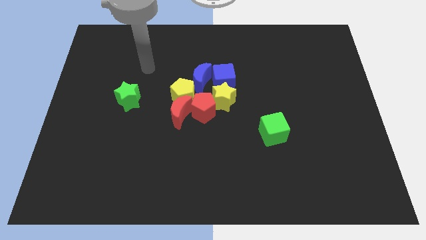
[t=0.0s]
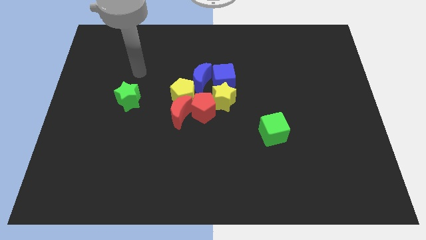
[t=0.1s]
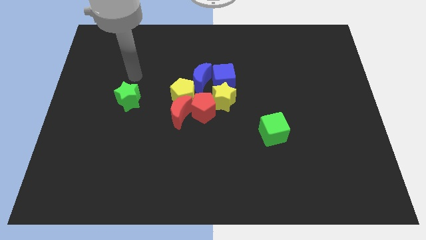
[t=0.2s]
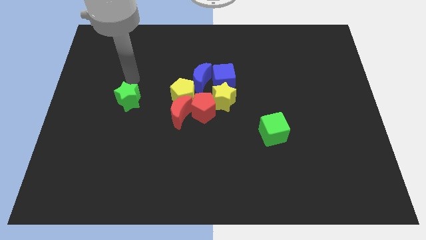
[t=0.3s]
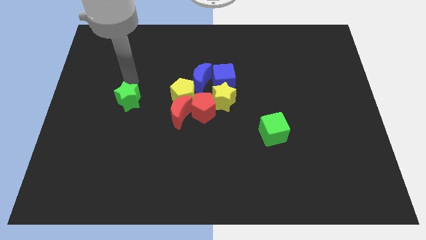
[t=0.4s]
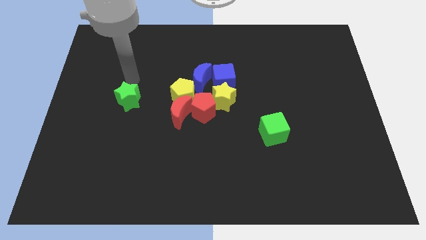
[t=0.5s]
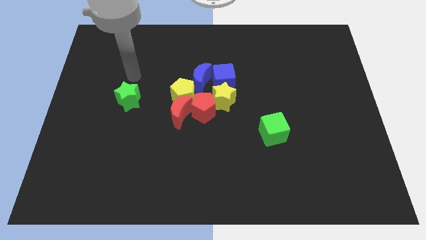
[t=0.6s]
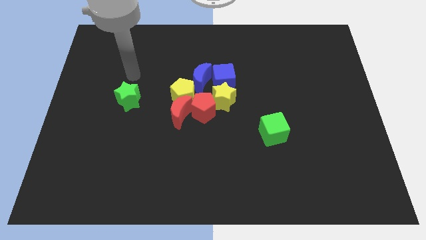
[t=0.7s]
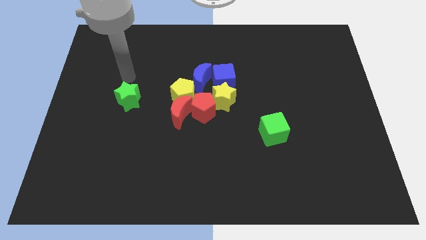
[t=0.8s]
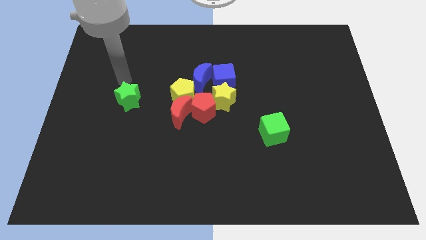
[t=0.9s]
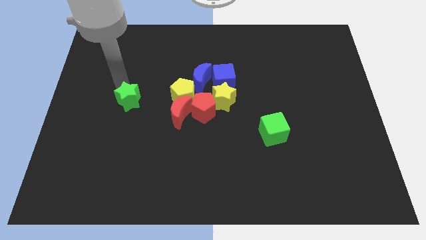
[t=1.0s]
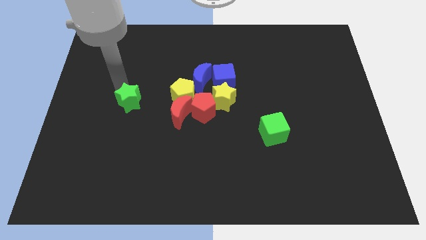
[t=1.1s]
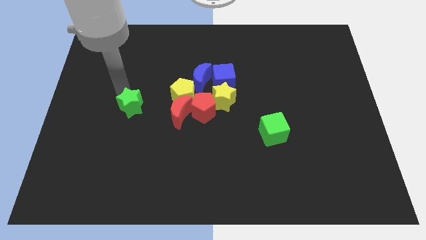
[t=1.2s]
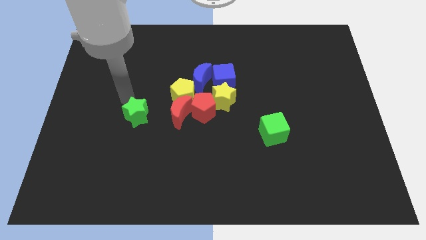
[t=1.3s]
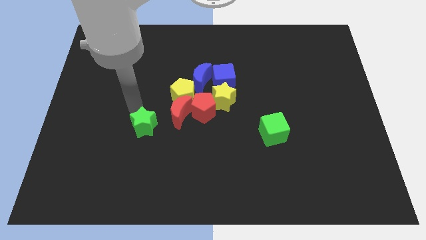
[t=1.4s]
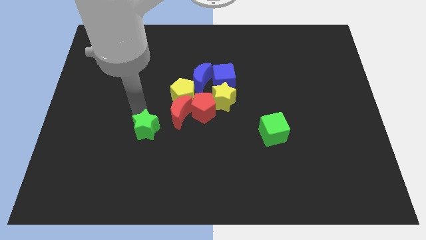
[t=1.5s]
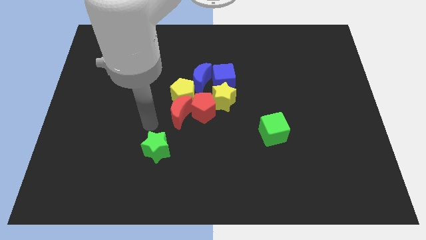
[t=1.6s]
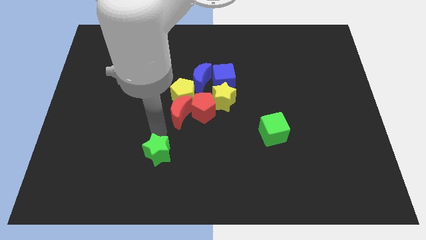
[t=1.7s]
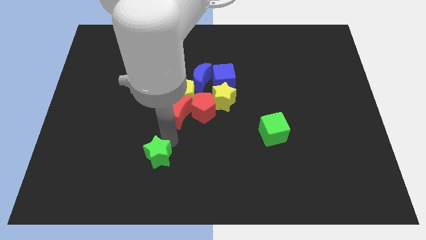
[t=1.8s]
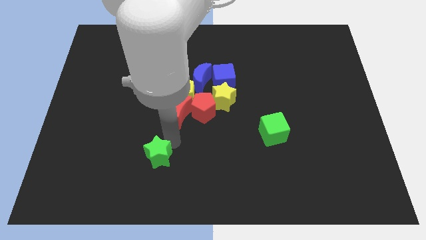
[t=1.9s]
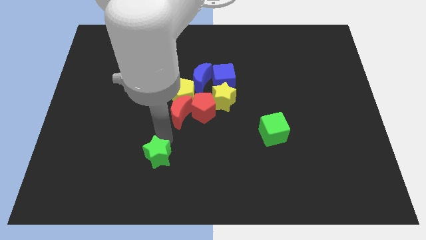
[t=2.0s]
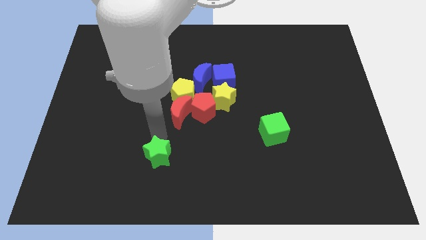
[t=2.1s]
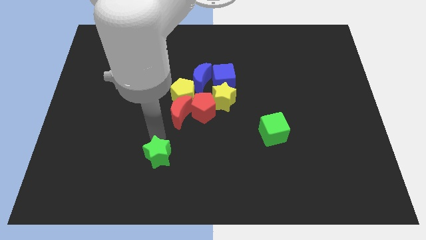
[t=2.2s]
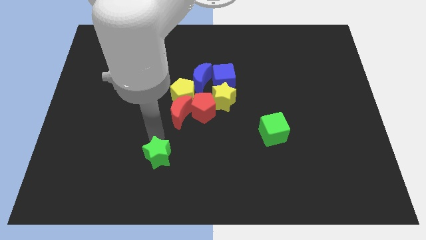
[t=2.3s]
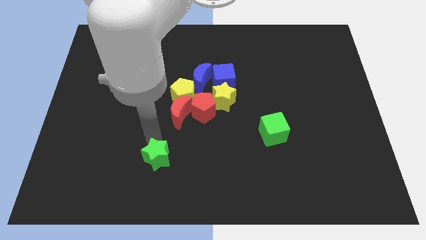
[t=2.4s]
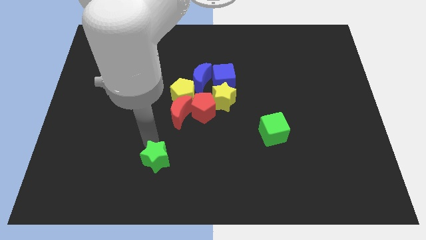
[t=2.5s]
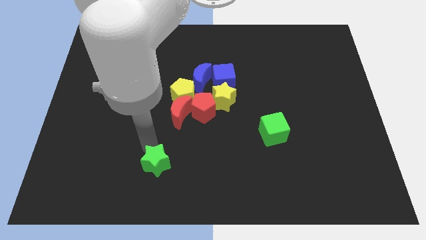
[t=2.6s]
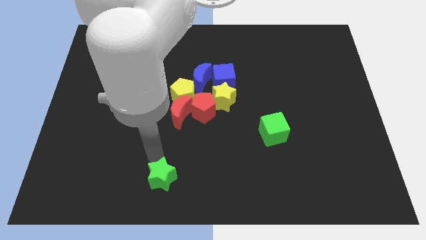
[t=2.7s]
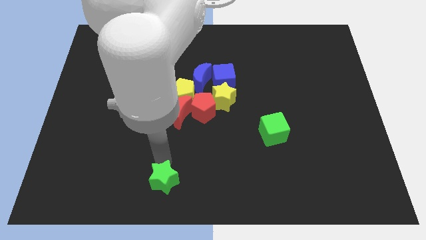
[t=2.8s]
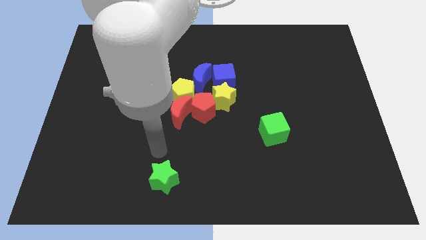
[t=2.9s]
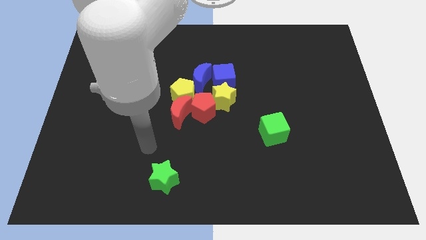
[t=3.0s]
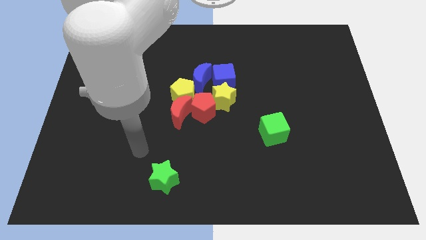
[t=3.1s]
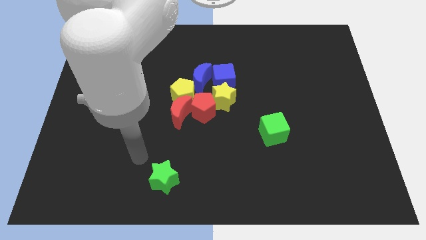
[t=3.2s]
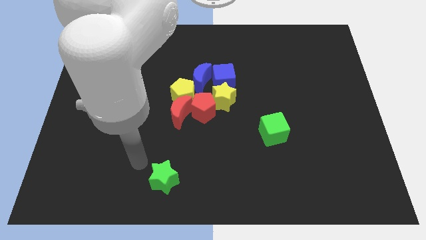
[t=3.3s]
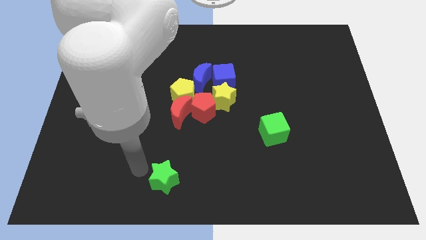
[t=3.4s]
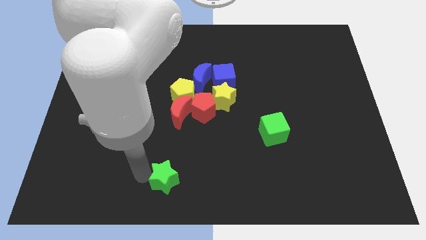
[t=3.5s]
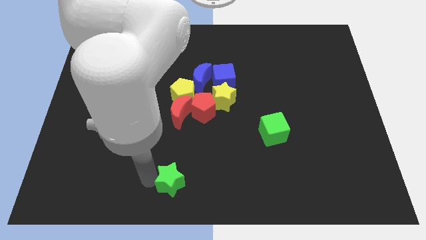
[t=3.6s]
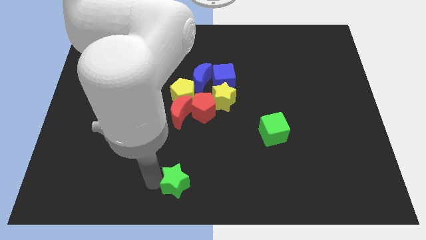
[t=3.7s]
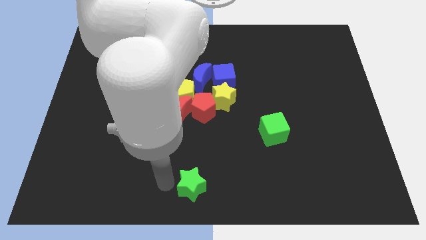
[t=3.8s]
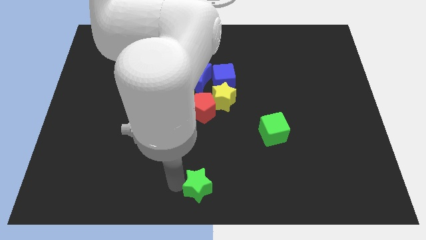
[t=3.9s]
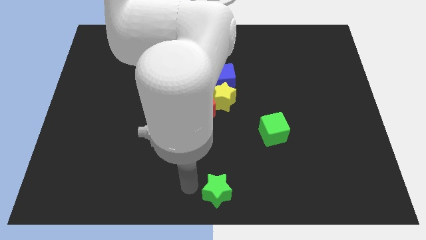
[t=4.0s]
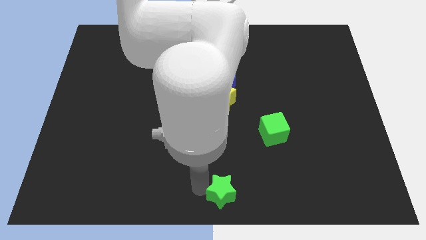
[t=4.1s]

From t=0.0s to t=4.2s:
move the green star vertically below the red pentagon

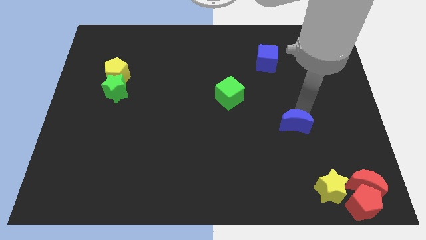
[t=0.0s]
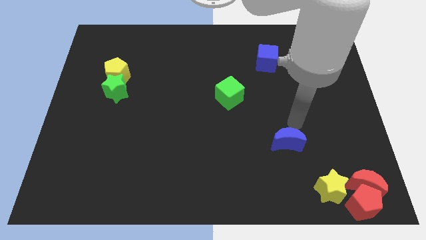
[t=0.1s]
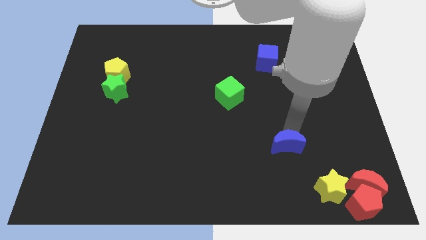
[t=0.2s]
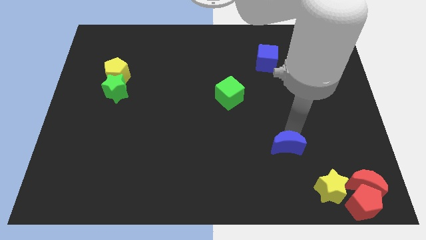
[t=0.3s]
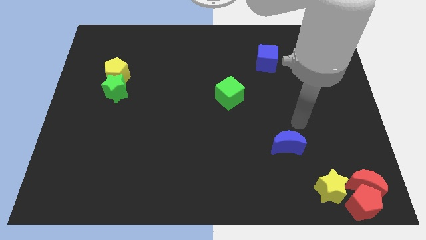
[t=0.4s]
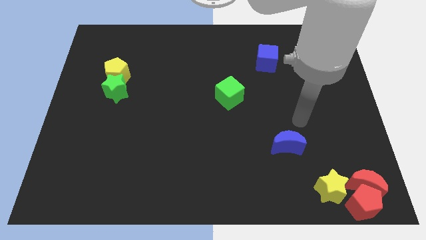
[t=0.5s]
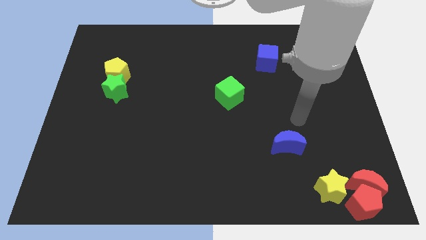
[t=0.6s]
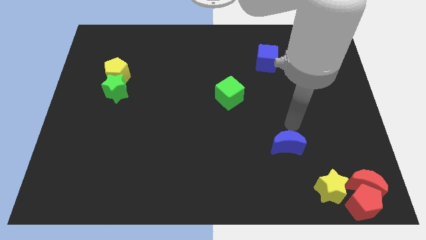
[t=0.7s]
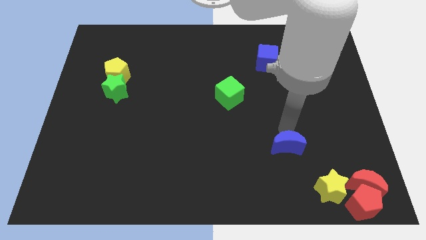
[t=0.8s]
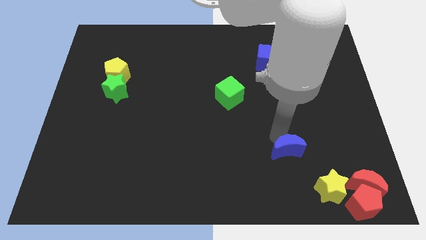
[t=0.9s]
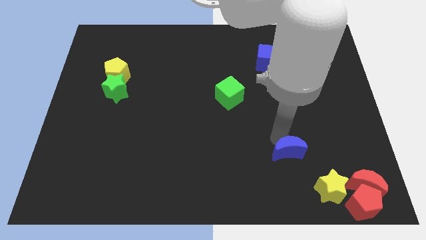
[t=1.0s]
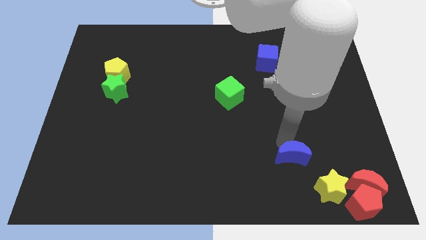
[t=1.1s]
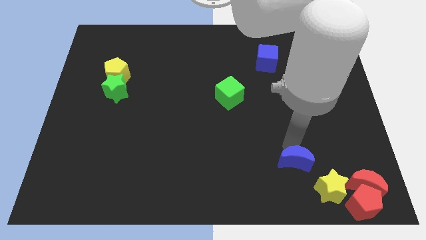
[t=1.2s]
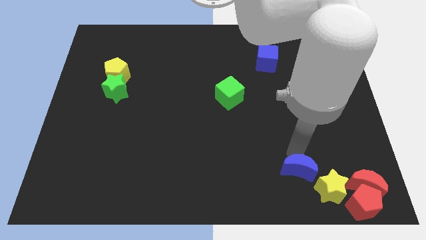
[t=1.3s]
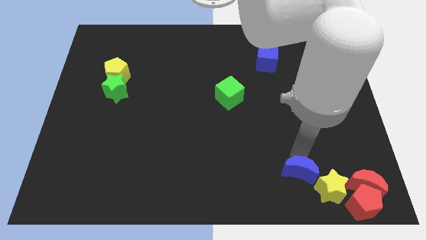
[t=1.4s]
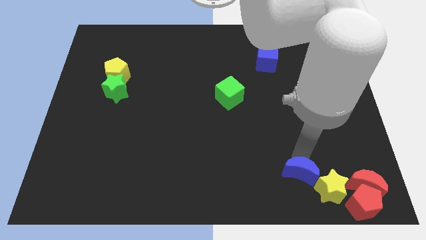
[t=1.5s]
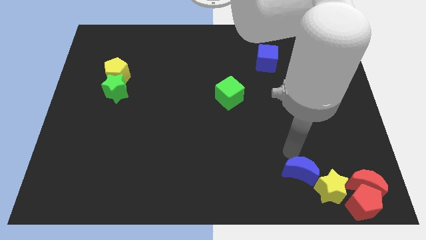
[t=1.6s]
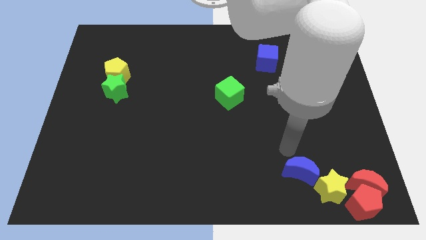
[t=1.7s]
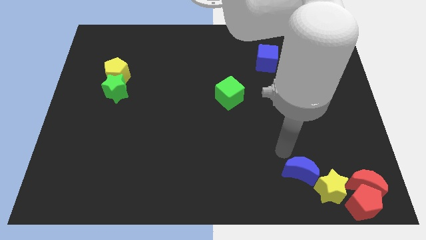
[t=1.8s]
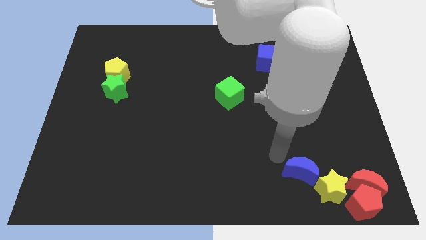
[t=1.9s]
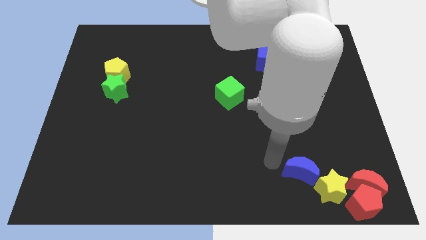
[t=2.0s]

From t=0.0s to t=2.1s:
place the blue moon diagonally top left to the yellow star

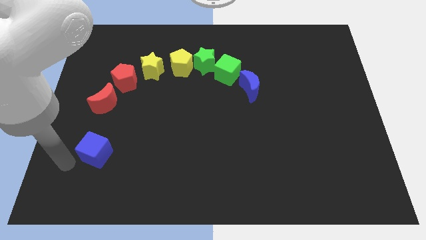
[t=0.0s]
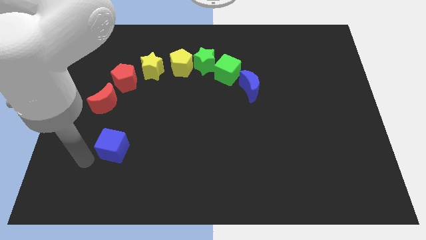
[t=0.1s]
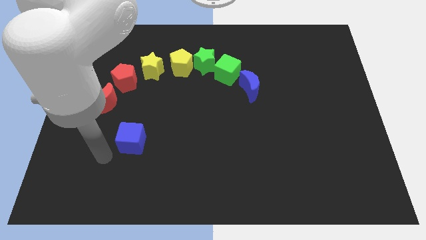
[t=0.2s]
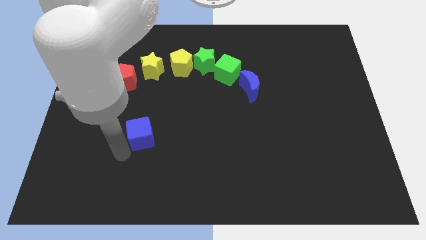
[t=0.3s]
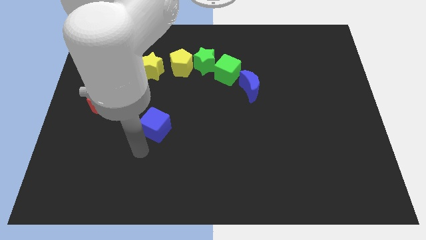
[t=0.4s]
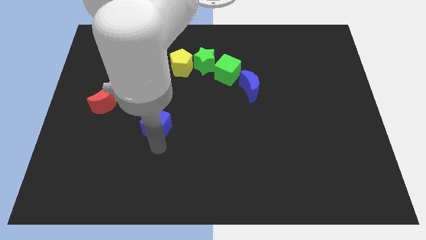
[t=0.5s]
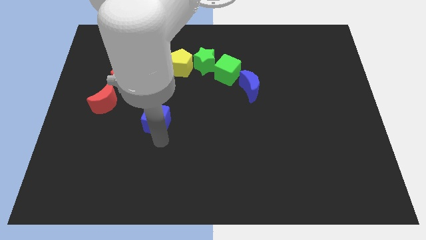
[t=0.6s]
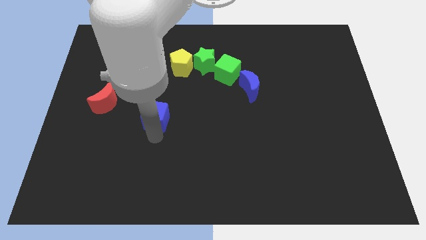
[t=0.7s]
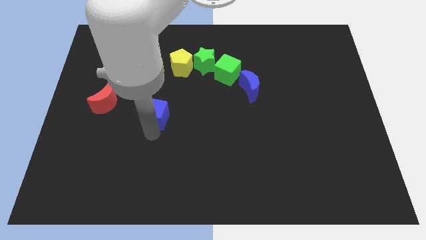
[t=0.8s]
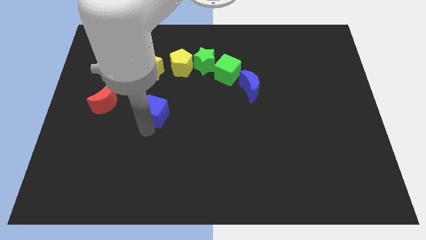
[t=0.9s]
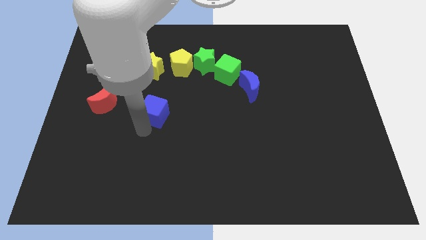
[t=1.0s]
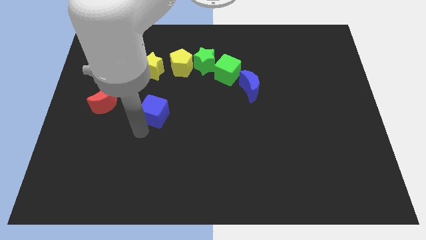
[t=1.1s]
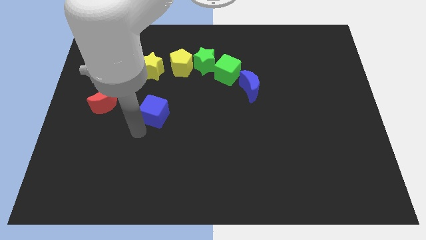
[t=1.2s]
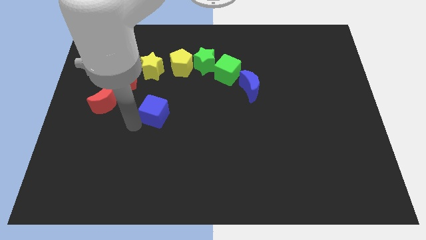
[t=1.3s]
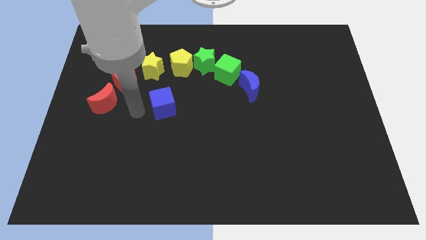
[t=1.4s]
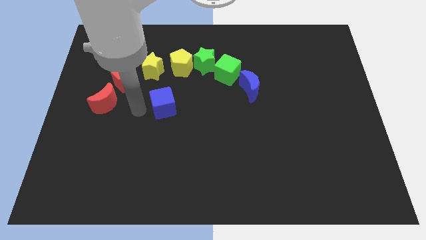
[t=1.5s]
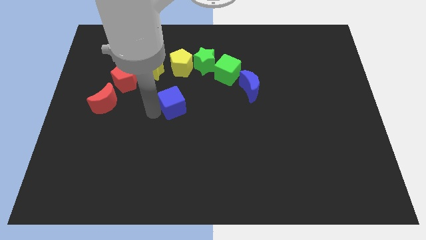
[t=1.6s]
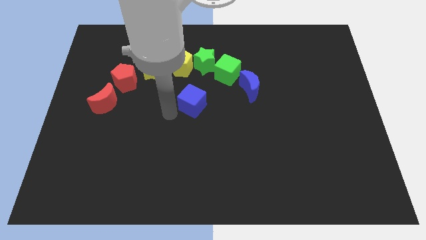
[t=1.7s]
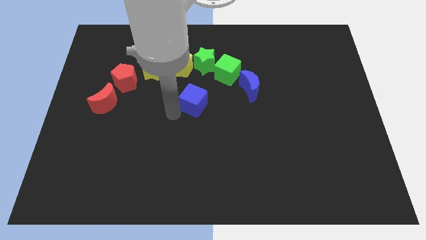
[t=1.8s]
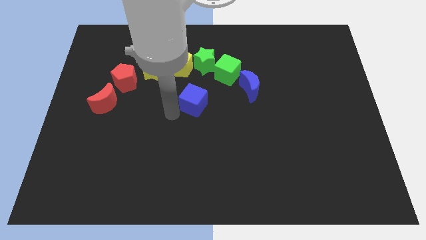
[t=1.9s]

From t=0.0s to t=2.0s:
move blue cube towards the blue crescent

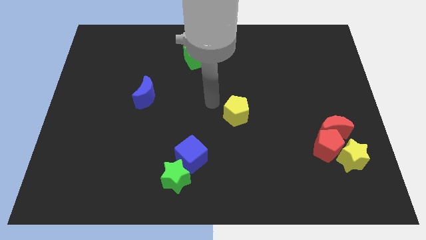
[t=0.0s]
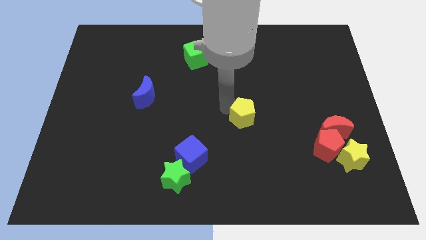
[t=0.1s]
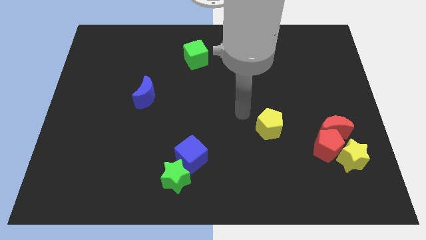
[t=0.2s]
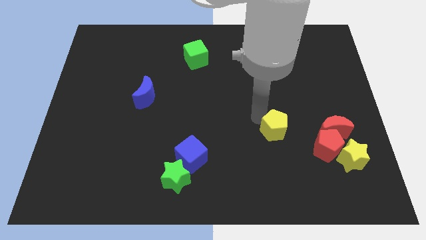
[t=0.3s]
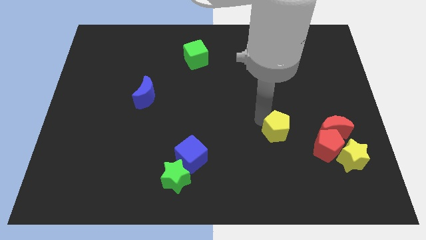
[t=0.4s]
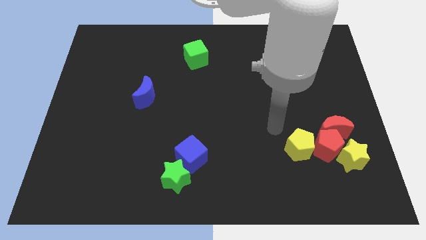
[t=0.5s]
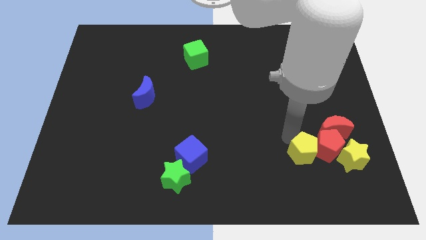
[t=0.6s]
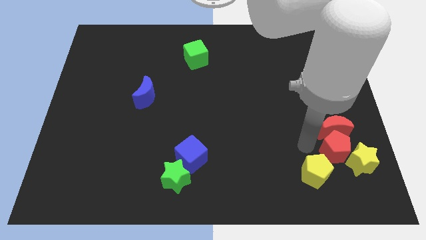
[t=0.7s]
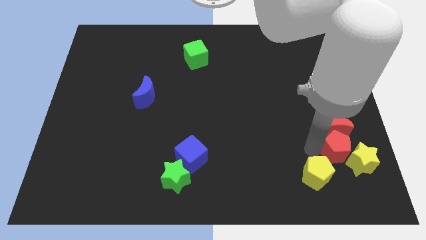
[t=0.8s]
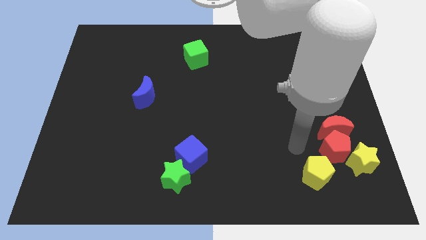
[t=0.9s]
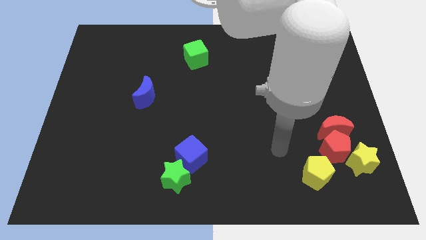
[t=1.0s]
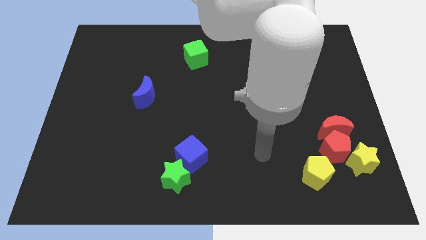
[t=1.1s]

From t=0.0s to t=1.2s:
move the yellow pentagon below to the red pentagon
